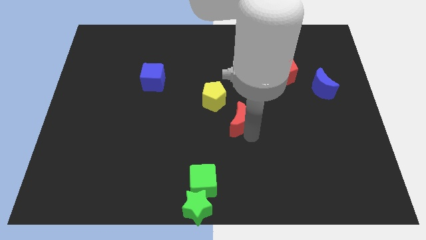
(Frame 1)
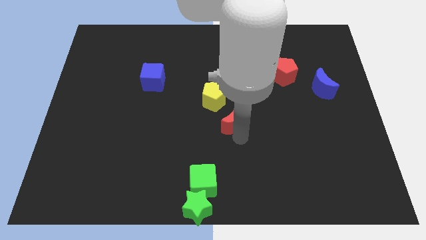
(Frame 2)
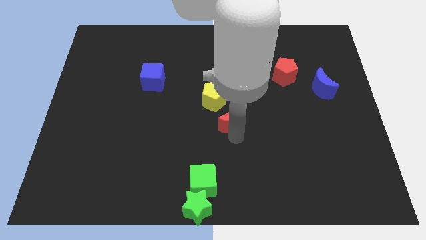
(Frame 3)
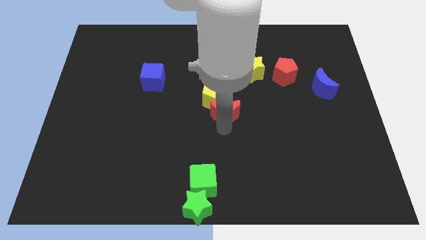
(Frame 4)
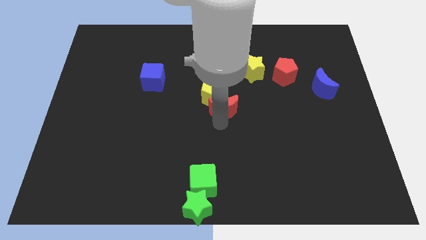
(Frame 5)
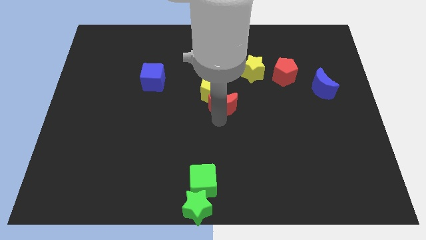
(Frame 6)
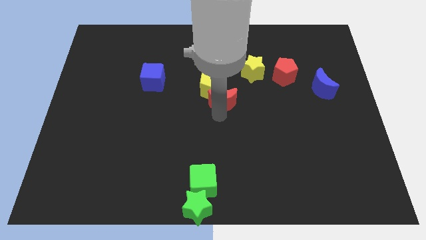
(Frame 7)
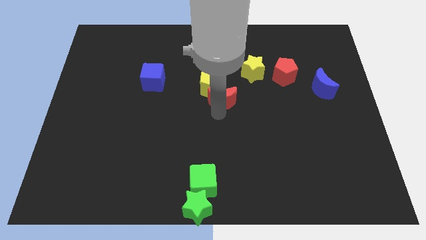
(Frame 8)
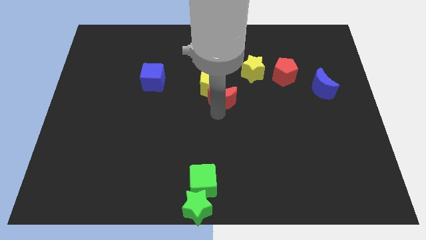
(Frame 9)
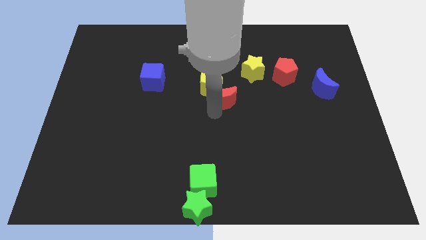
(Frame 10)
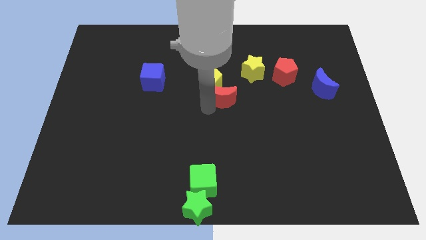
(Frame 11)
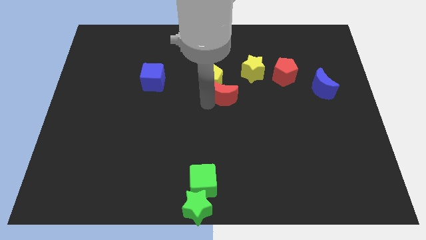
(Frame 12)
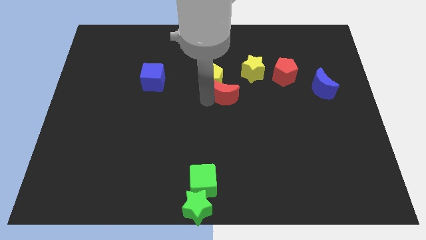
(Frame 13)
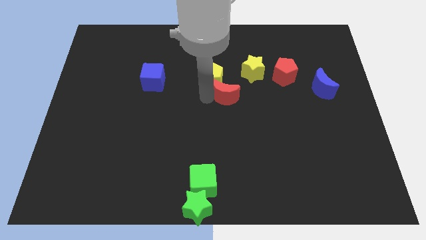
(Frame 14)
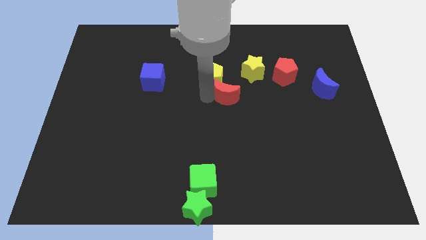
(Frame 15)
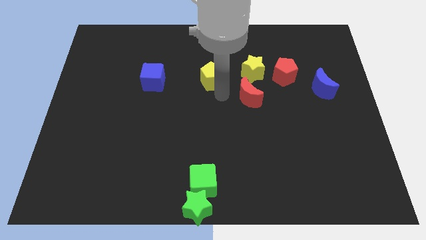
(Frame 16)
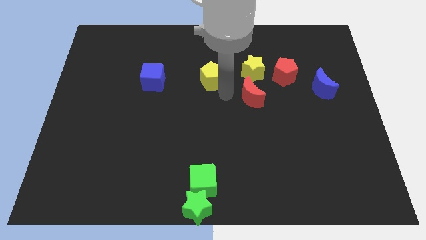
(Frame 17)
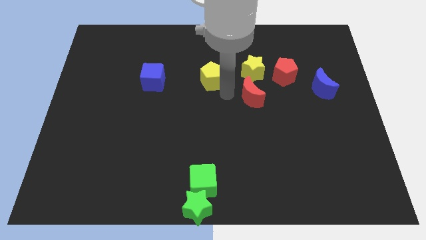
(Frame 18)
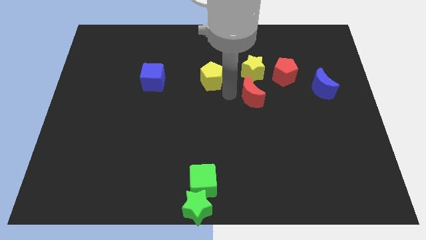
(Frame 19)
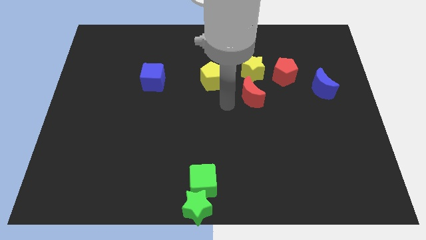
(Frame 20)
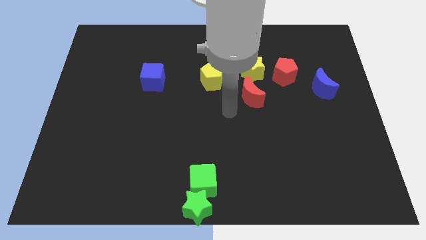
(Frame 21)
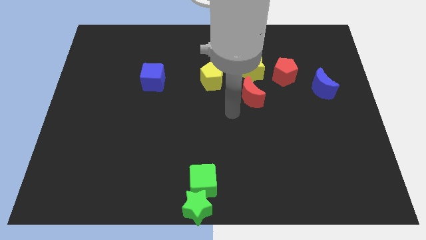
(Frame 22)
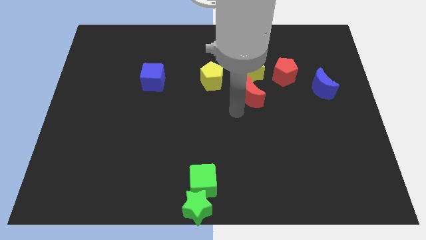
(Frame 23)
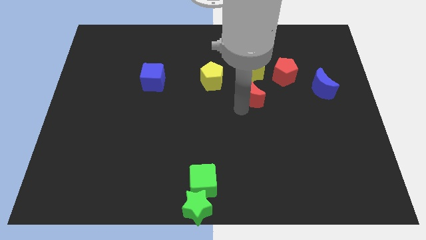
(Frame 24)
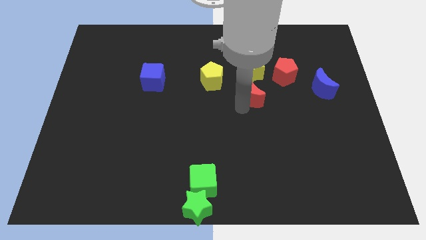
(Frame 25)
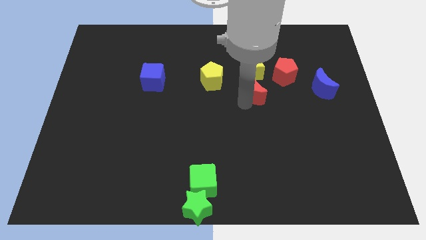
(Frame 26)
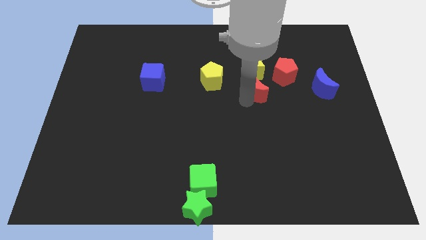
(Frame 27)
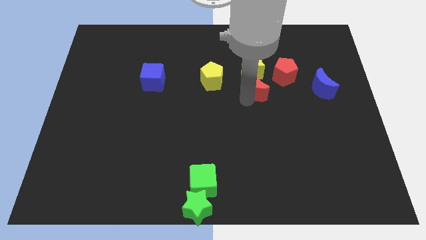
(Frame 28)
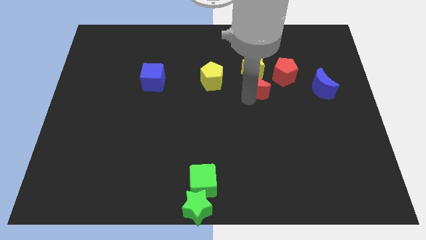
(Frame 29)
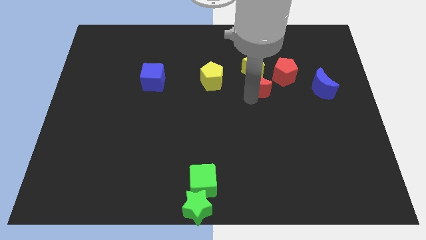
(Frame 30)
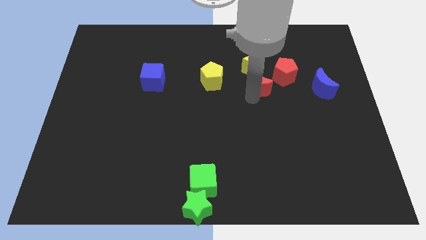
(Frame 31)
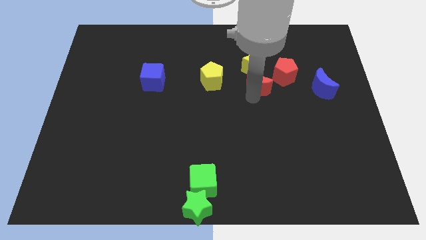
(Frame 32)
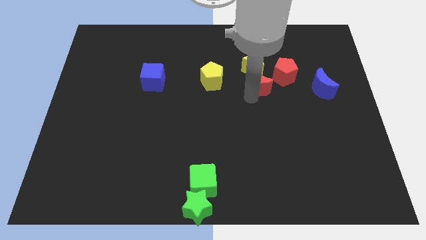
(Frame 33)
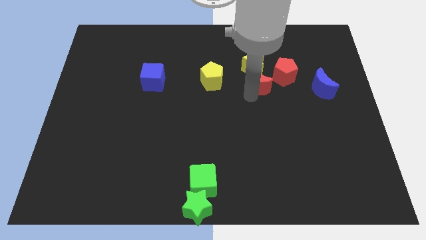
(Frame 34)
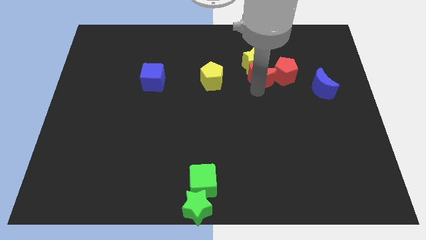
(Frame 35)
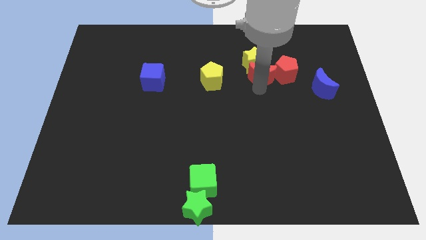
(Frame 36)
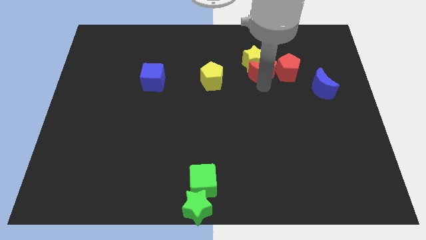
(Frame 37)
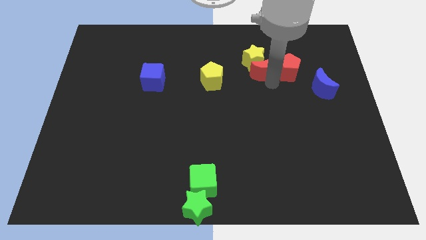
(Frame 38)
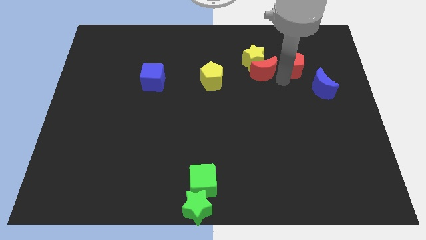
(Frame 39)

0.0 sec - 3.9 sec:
place the red moon parallel left to the red pentagon

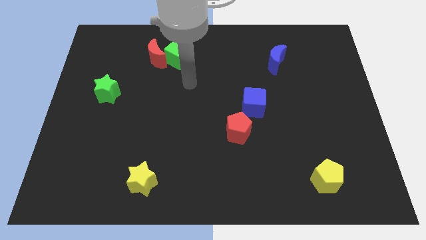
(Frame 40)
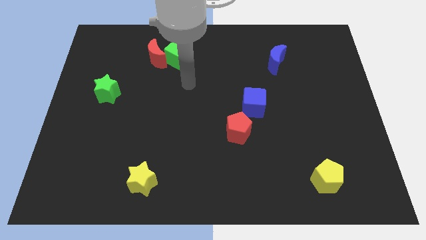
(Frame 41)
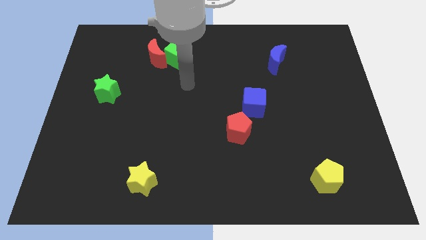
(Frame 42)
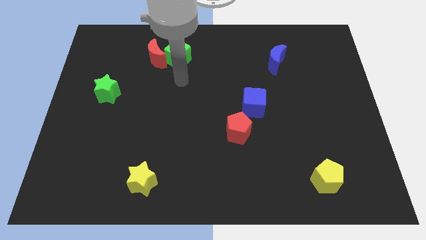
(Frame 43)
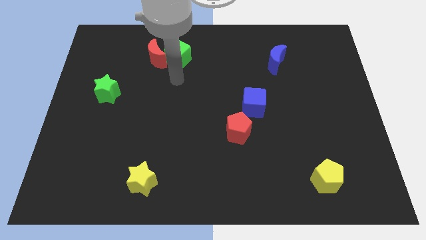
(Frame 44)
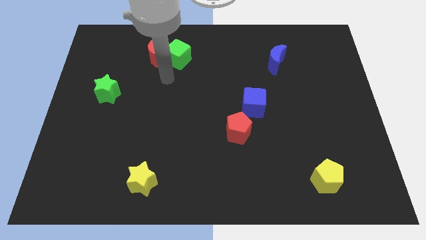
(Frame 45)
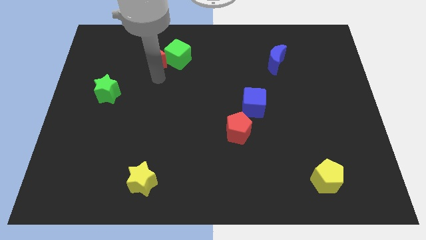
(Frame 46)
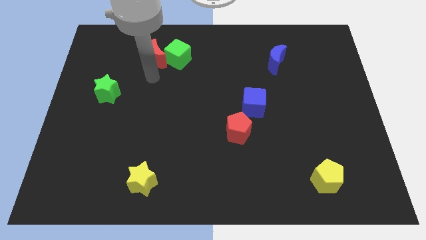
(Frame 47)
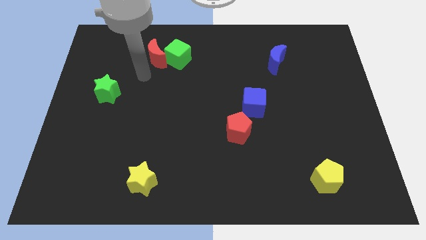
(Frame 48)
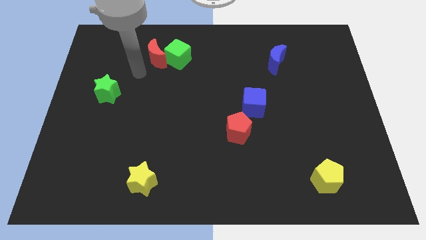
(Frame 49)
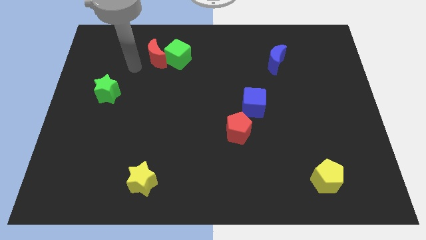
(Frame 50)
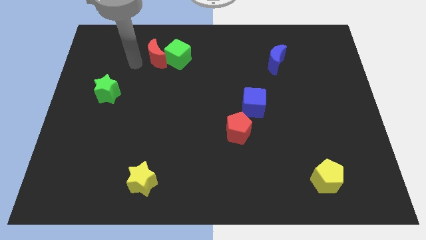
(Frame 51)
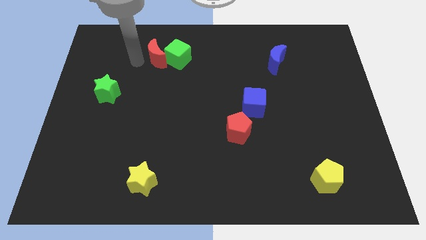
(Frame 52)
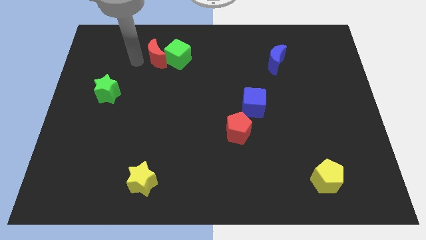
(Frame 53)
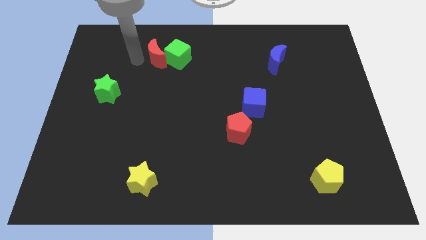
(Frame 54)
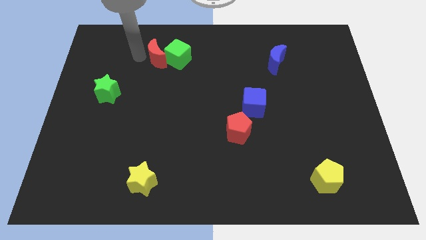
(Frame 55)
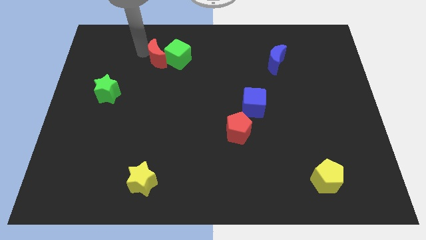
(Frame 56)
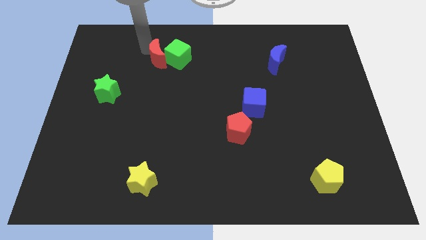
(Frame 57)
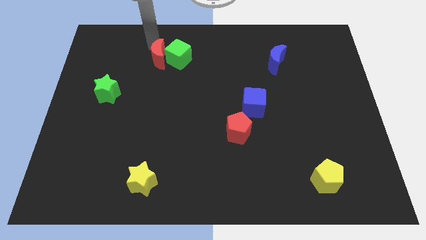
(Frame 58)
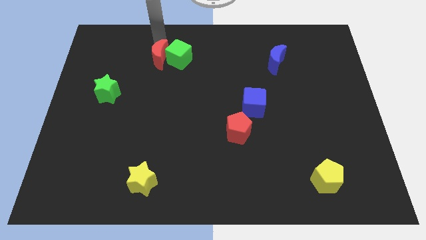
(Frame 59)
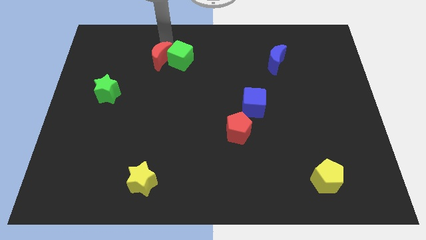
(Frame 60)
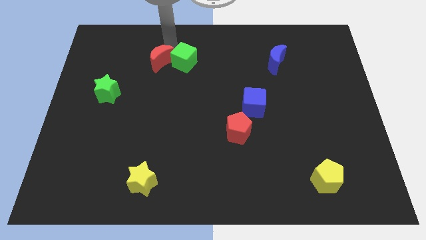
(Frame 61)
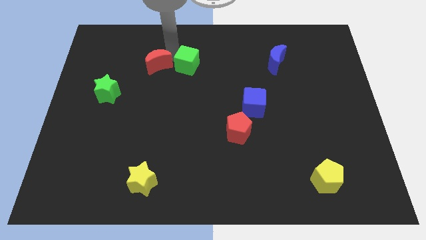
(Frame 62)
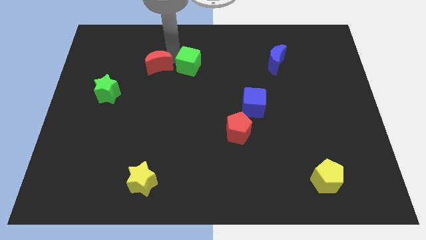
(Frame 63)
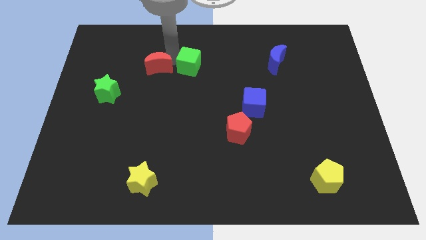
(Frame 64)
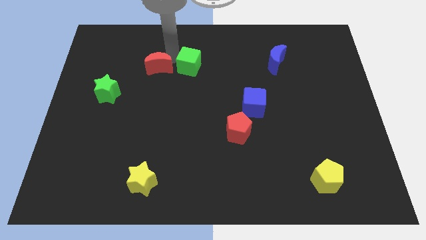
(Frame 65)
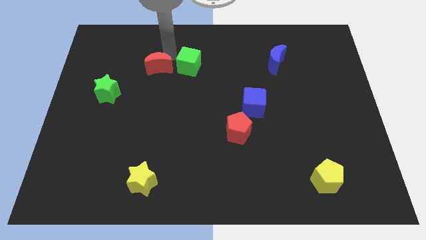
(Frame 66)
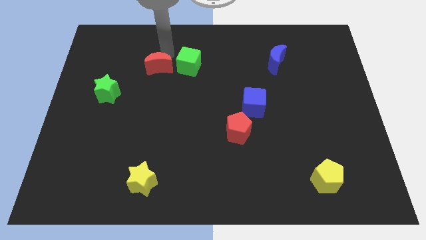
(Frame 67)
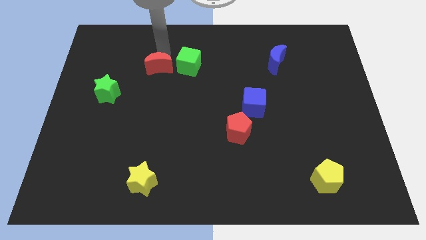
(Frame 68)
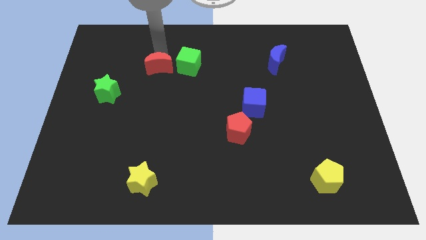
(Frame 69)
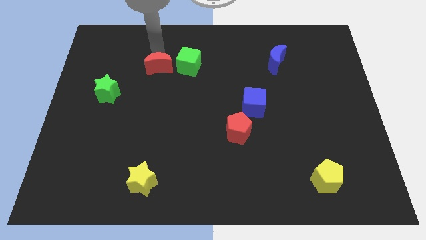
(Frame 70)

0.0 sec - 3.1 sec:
move the red moon into the green cube

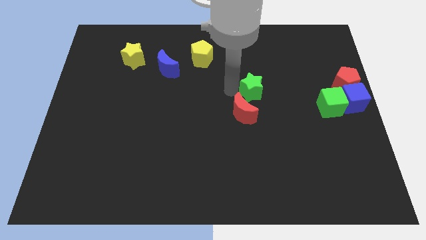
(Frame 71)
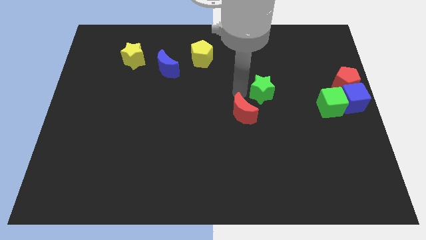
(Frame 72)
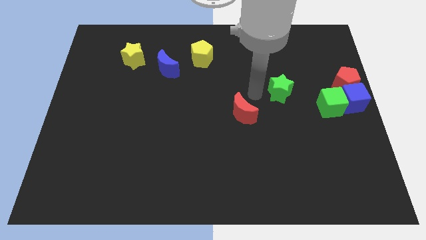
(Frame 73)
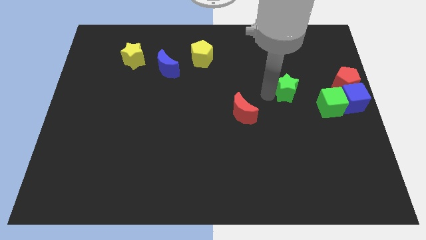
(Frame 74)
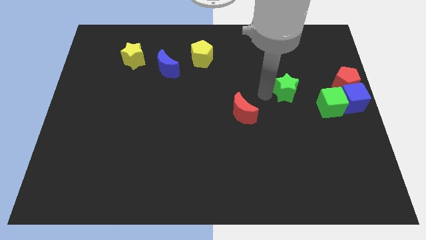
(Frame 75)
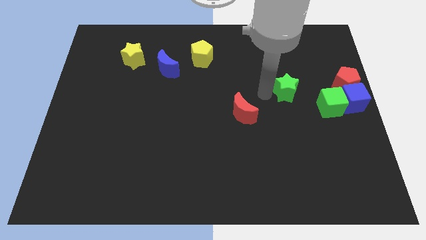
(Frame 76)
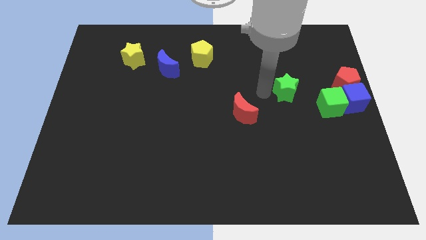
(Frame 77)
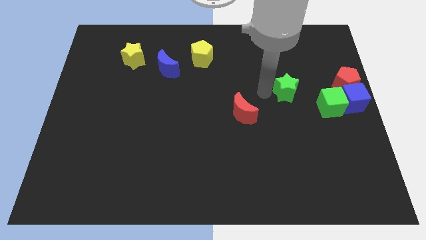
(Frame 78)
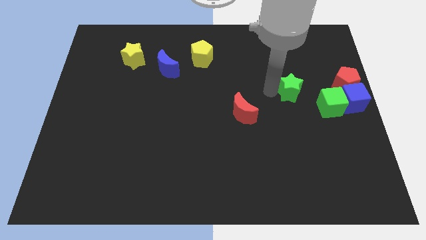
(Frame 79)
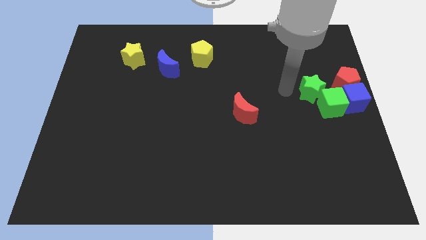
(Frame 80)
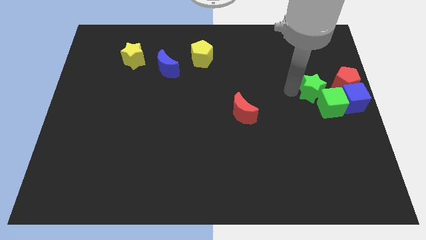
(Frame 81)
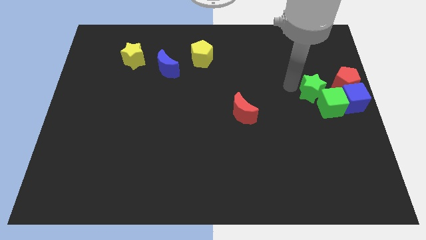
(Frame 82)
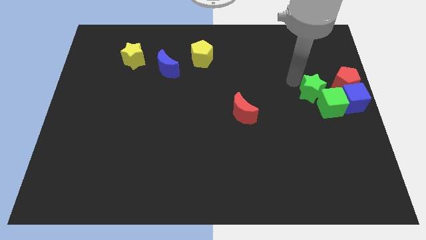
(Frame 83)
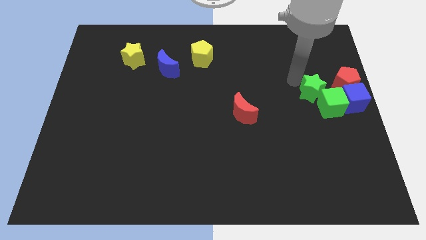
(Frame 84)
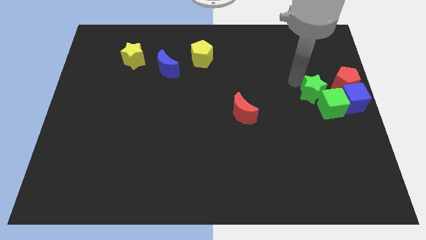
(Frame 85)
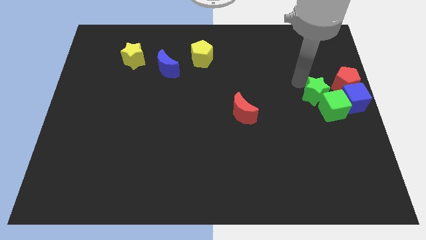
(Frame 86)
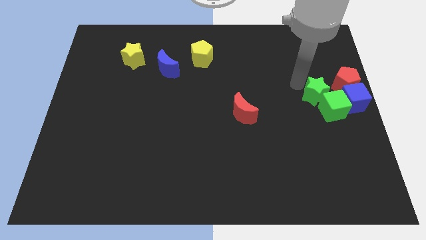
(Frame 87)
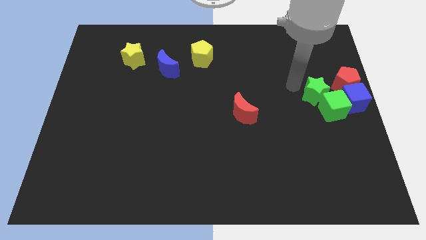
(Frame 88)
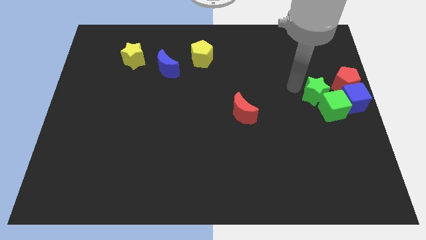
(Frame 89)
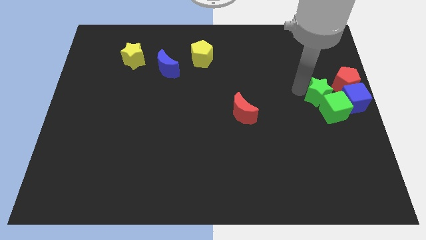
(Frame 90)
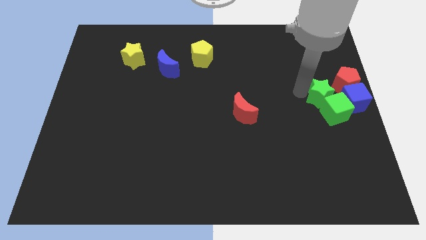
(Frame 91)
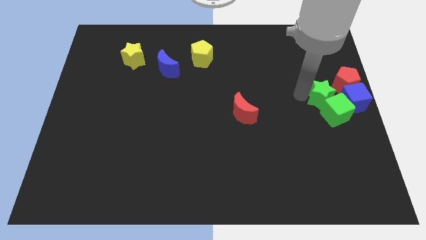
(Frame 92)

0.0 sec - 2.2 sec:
push the green star into the green cube

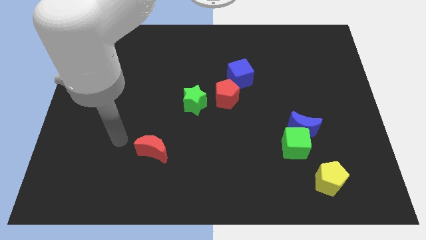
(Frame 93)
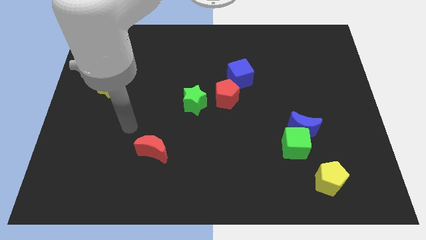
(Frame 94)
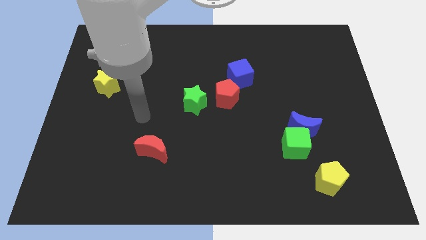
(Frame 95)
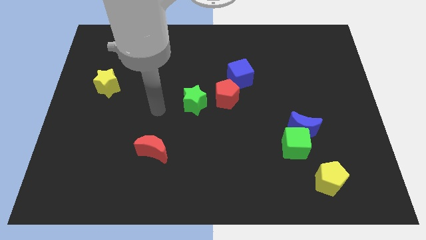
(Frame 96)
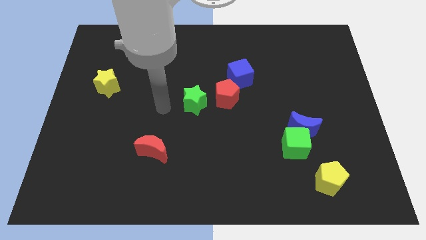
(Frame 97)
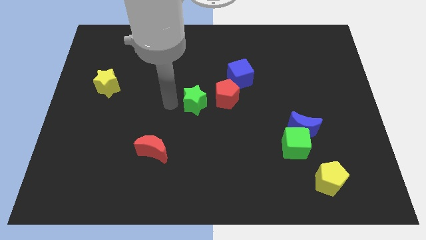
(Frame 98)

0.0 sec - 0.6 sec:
place your arm at the left of the green star
